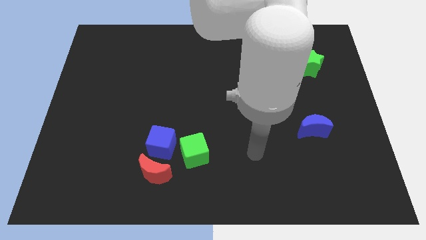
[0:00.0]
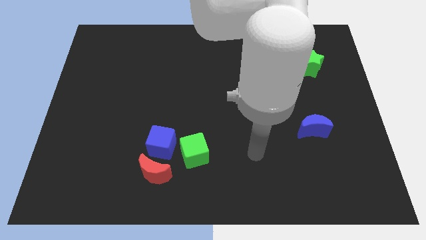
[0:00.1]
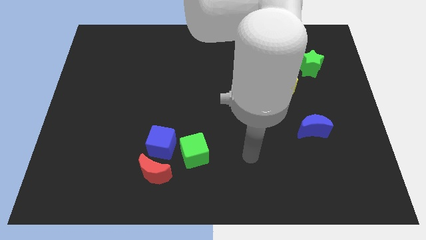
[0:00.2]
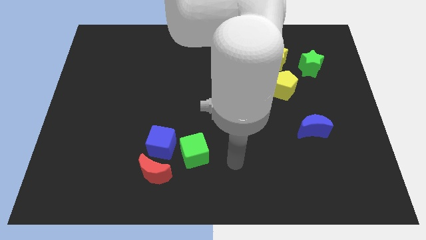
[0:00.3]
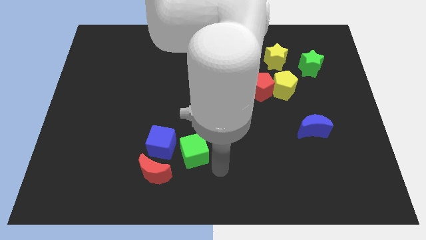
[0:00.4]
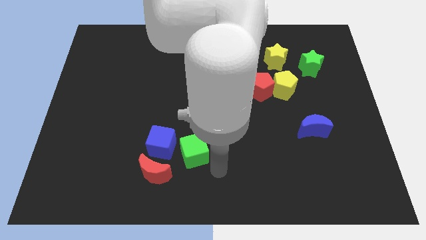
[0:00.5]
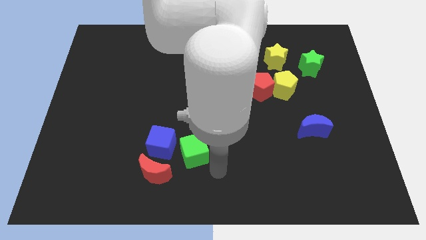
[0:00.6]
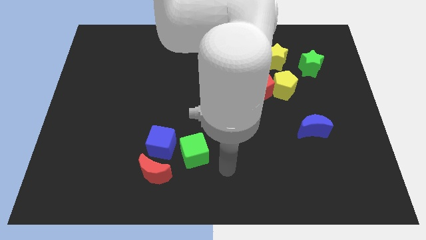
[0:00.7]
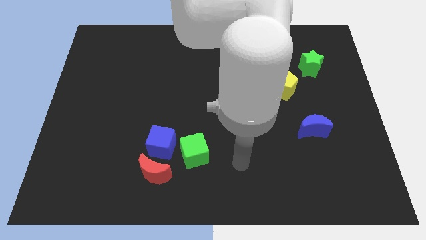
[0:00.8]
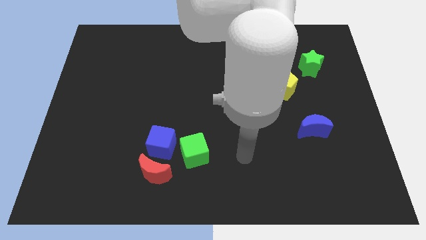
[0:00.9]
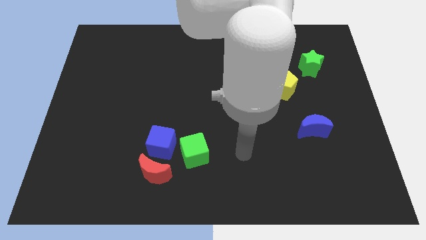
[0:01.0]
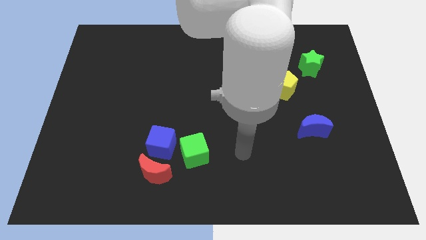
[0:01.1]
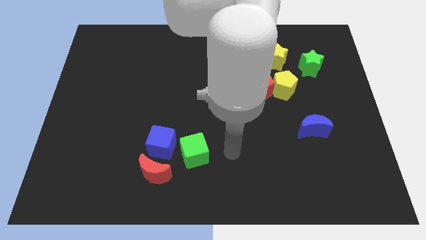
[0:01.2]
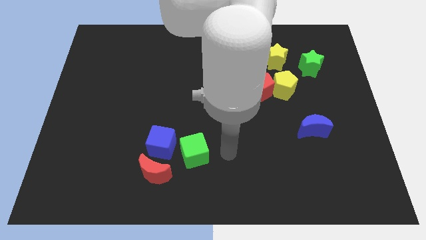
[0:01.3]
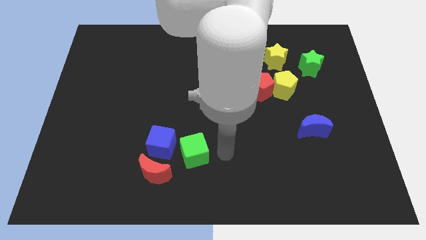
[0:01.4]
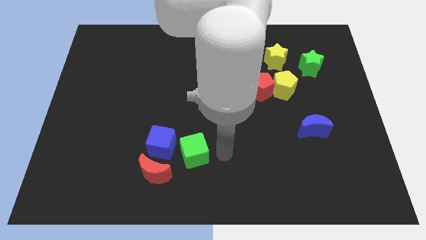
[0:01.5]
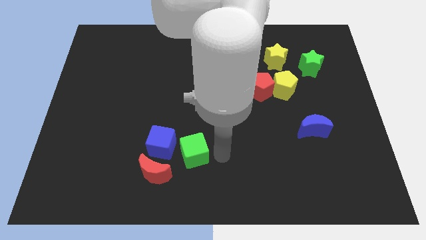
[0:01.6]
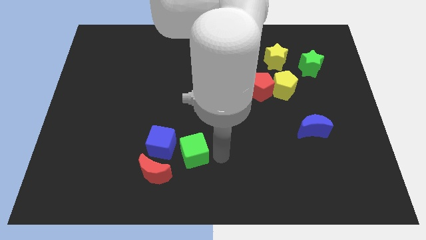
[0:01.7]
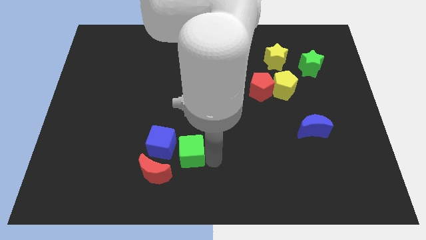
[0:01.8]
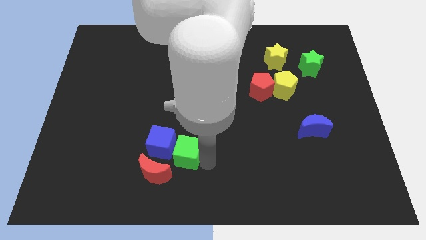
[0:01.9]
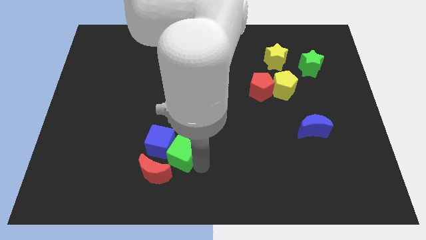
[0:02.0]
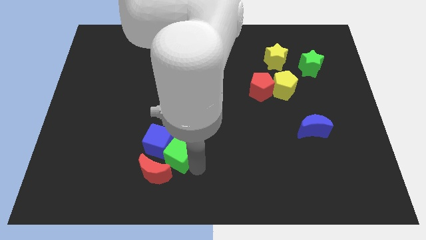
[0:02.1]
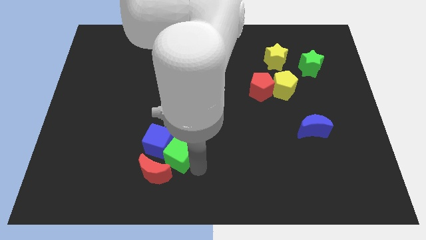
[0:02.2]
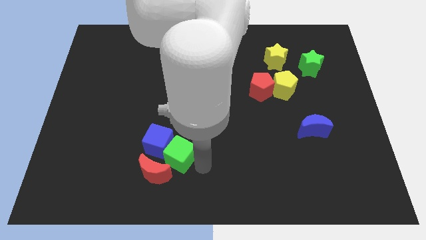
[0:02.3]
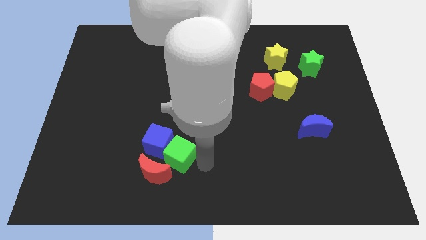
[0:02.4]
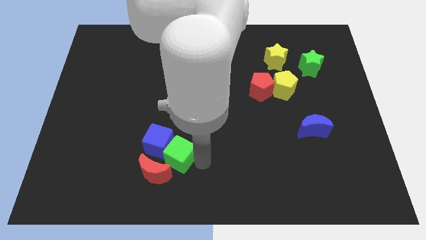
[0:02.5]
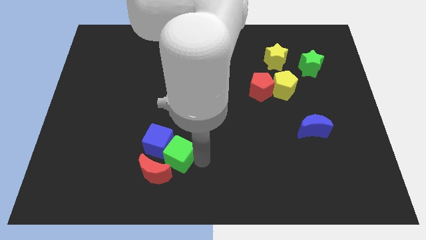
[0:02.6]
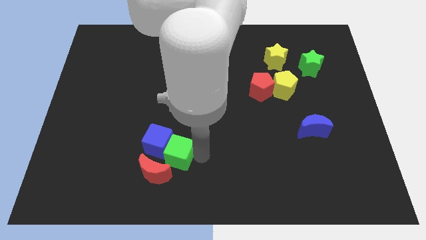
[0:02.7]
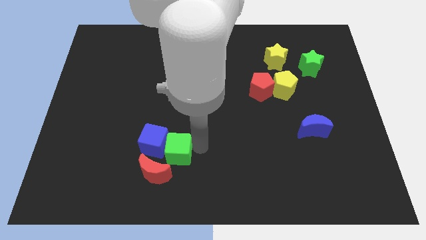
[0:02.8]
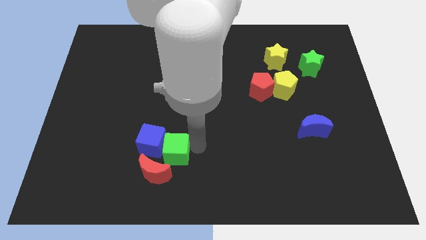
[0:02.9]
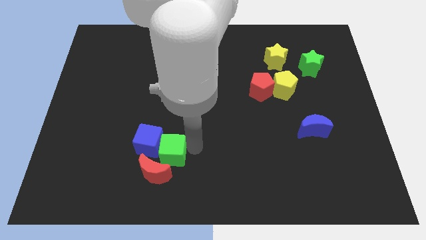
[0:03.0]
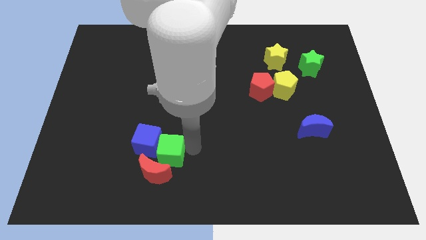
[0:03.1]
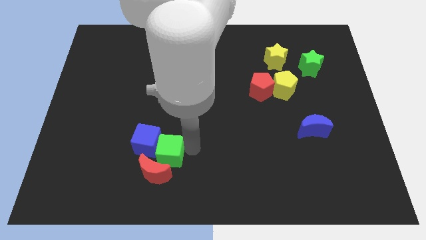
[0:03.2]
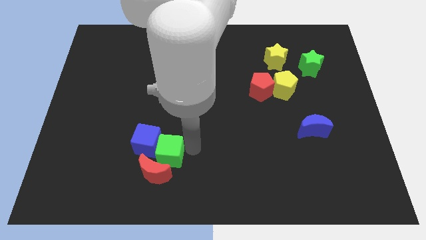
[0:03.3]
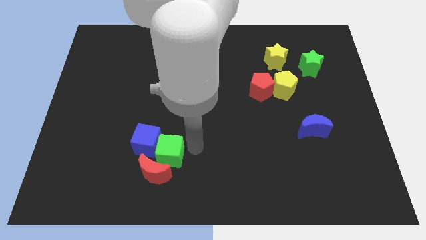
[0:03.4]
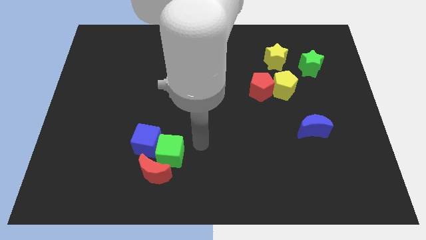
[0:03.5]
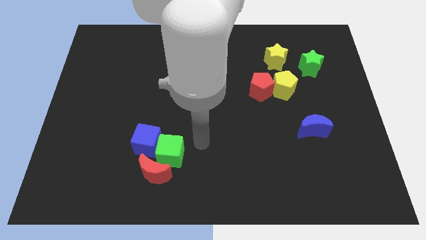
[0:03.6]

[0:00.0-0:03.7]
push green cube slightly towards left

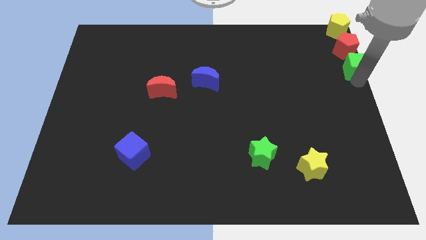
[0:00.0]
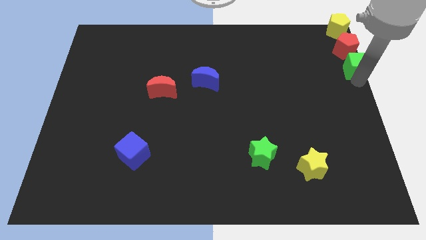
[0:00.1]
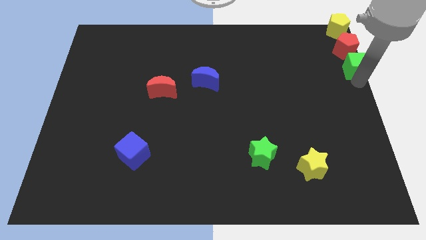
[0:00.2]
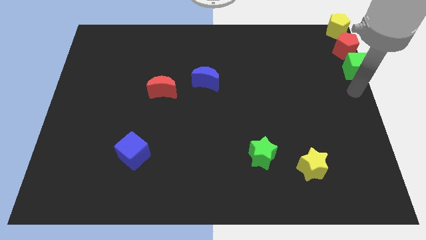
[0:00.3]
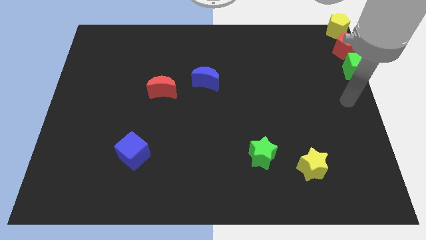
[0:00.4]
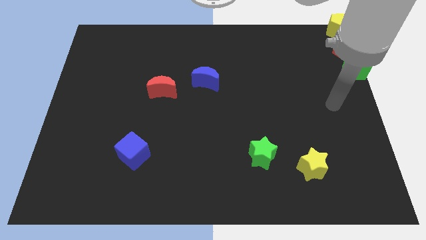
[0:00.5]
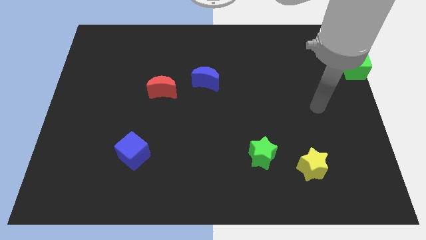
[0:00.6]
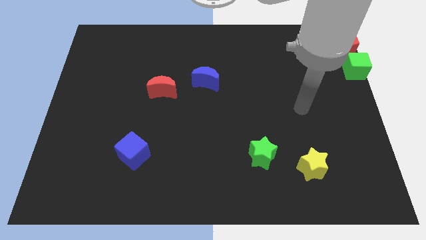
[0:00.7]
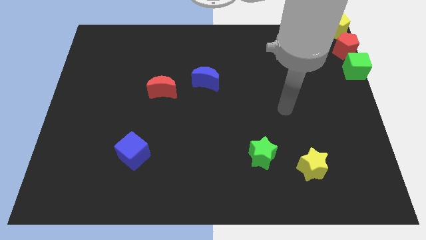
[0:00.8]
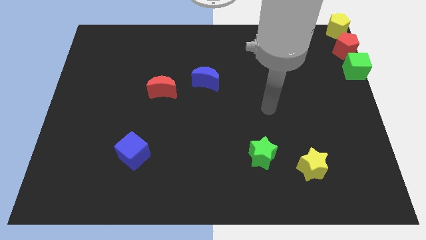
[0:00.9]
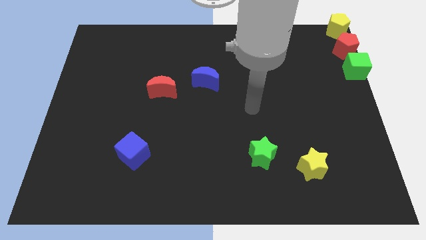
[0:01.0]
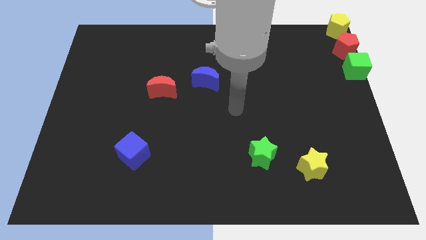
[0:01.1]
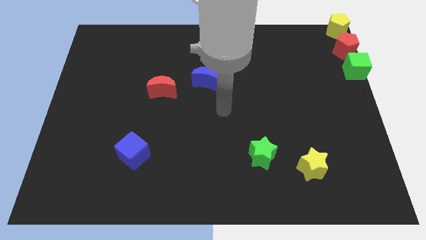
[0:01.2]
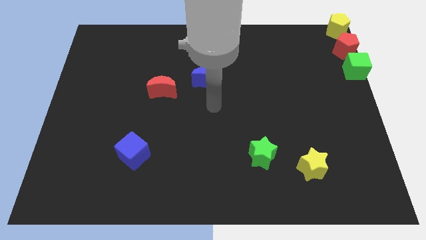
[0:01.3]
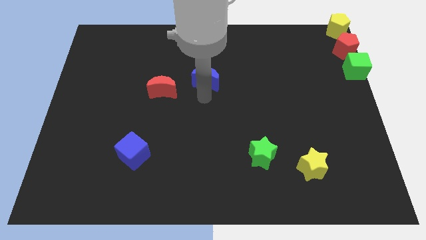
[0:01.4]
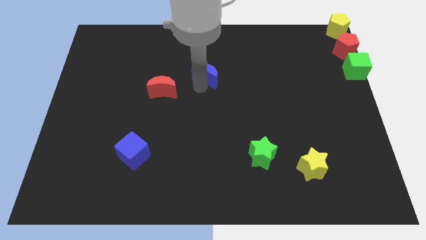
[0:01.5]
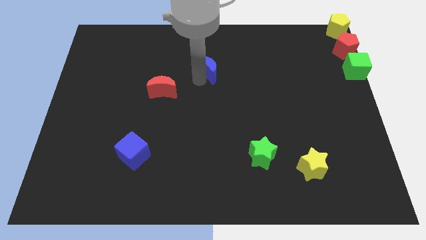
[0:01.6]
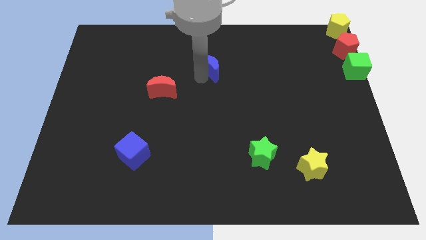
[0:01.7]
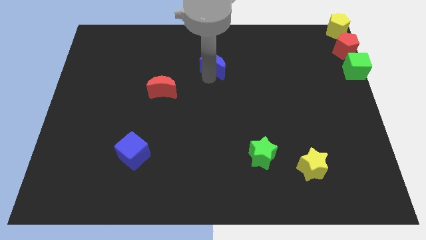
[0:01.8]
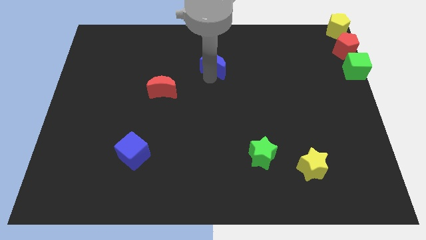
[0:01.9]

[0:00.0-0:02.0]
move the blue moon towards the top center of the board

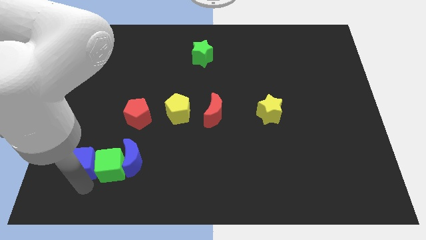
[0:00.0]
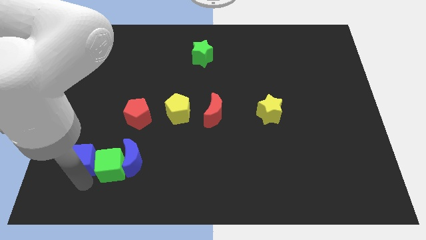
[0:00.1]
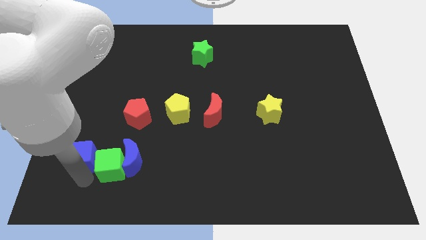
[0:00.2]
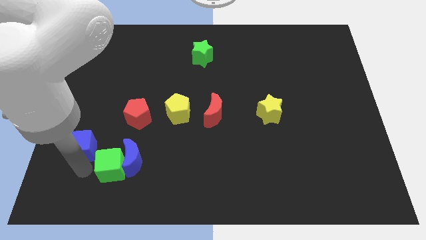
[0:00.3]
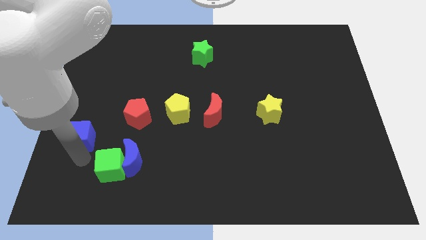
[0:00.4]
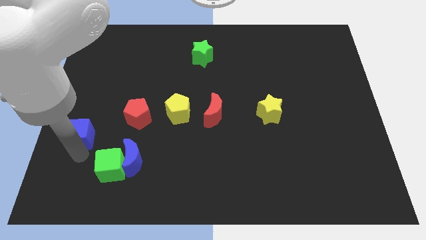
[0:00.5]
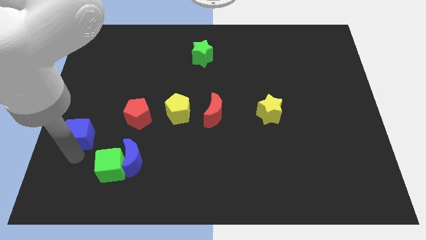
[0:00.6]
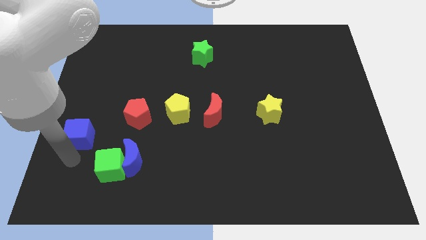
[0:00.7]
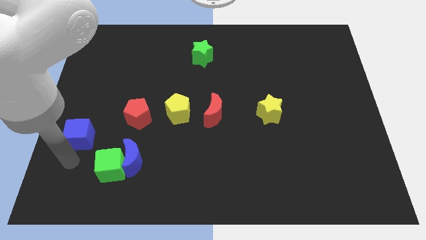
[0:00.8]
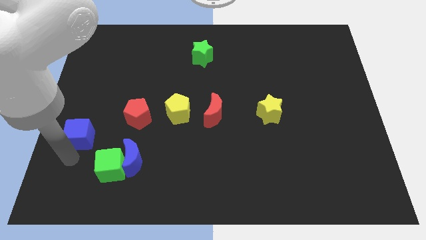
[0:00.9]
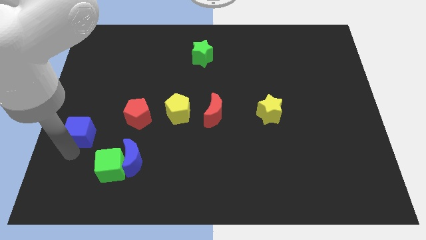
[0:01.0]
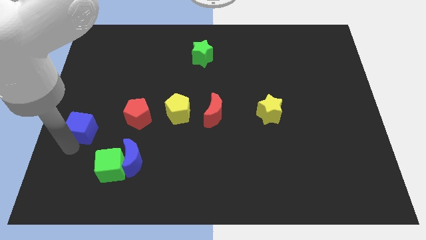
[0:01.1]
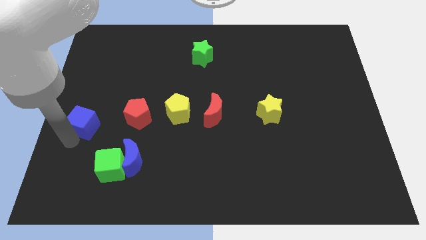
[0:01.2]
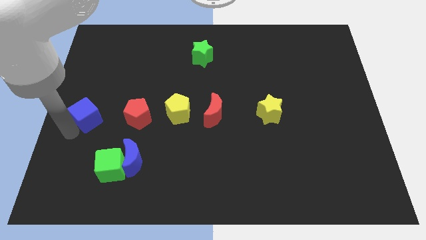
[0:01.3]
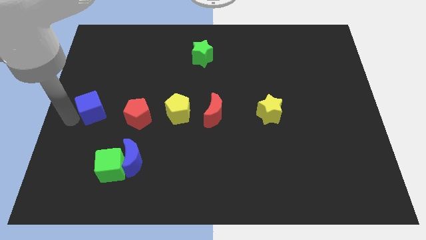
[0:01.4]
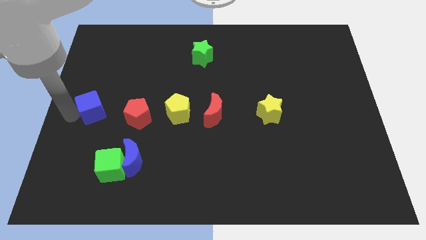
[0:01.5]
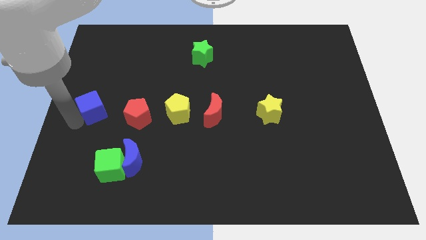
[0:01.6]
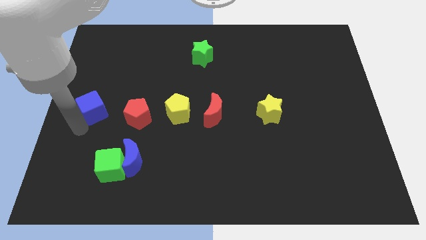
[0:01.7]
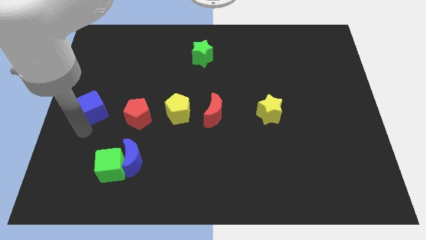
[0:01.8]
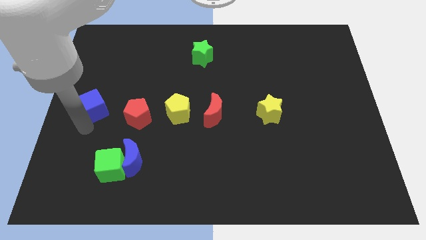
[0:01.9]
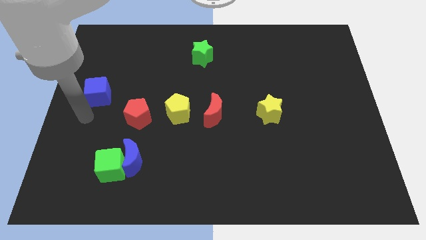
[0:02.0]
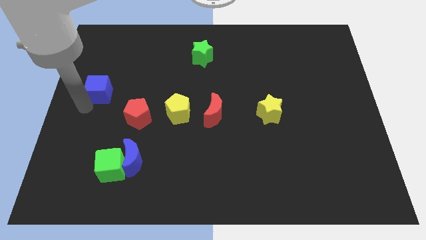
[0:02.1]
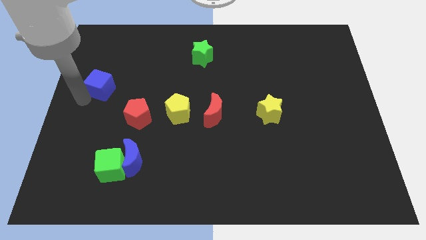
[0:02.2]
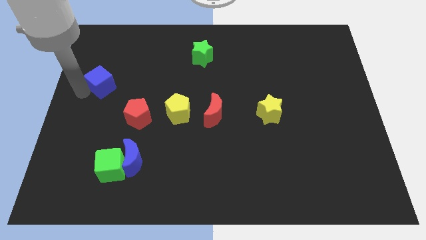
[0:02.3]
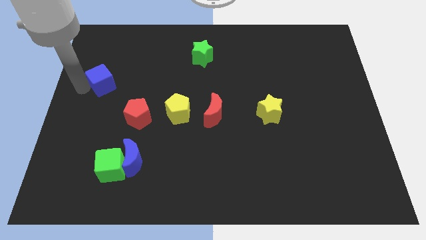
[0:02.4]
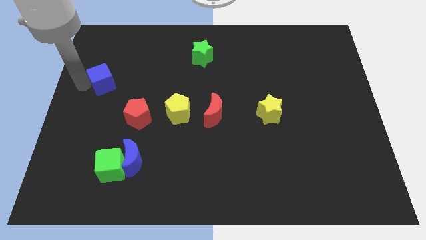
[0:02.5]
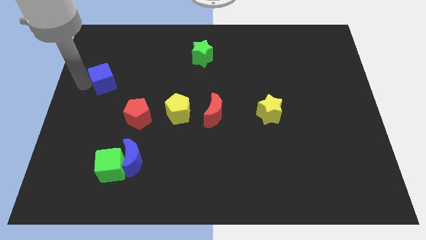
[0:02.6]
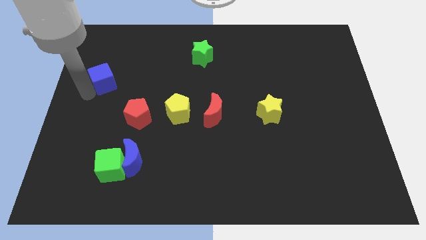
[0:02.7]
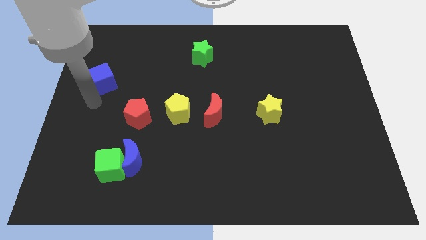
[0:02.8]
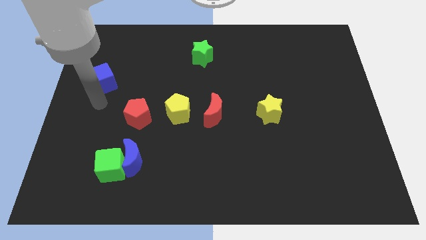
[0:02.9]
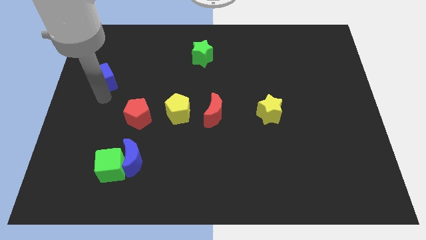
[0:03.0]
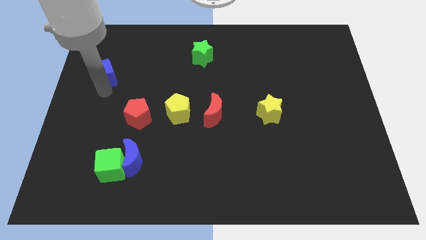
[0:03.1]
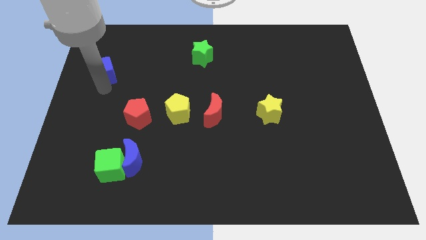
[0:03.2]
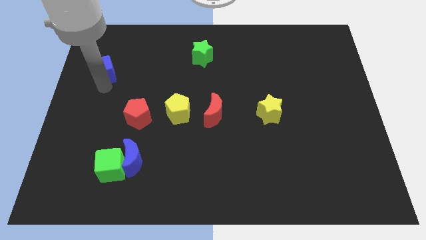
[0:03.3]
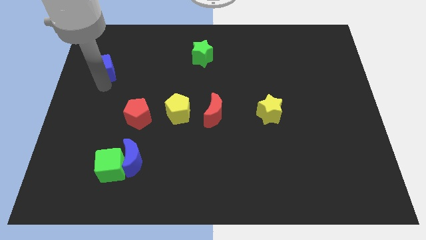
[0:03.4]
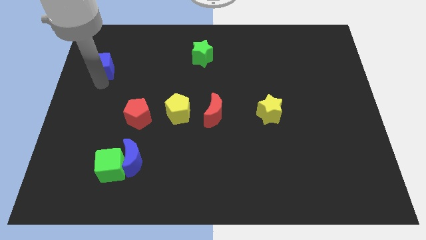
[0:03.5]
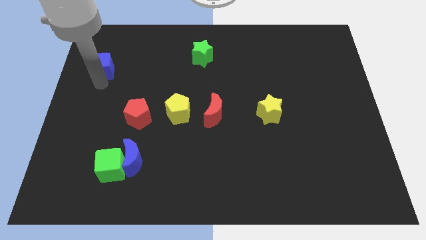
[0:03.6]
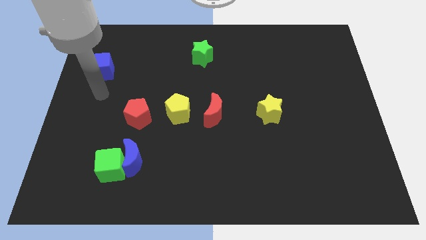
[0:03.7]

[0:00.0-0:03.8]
separate the blue cube from the green cube
